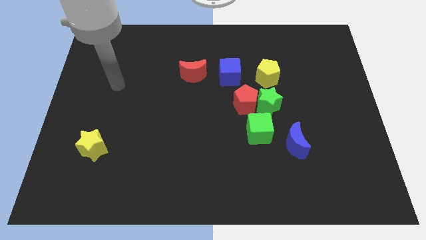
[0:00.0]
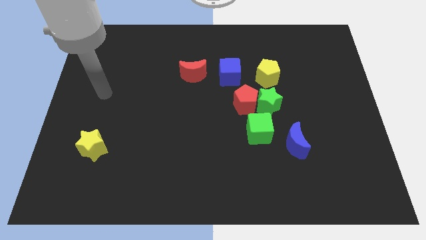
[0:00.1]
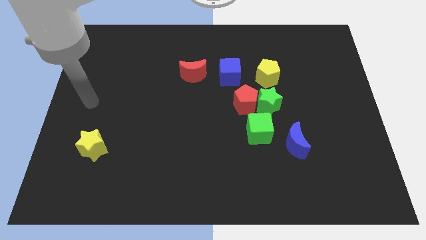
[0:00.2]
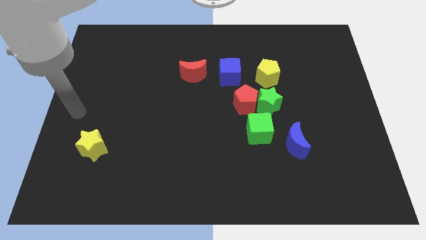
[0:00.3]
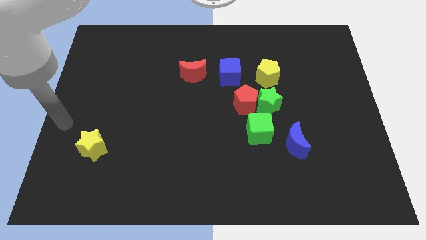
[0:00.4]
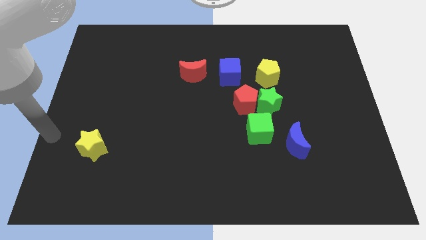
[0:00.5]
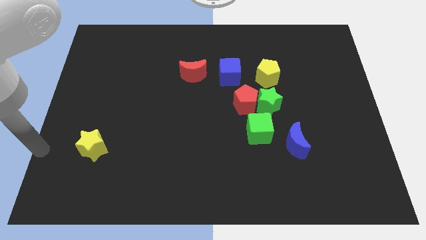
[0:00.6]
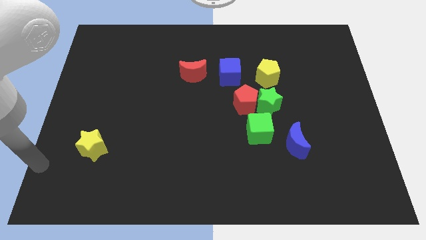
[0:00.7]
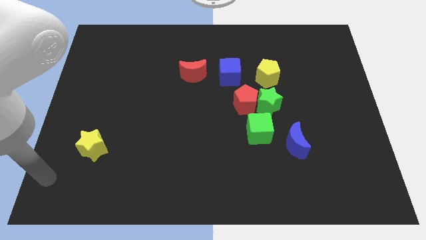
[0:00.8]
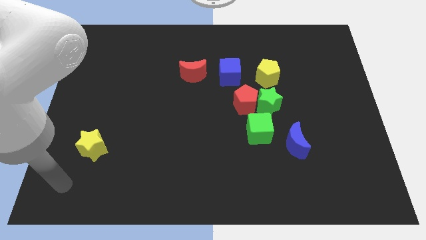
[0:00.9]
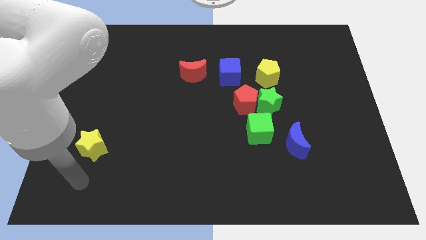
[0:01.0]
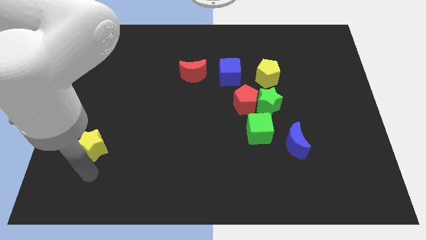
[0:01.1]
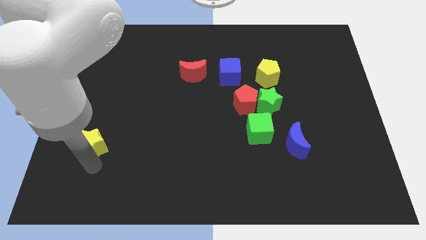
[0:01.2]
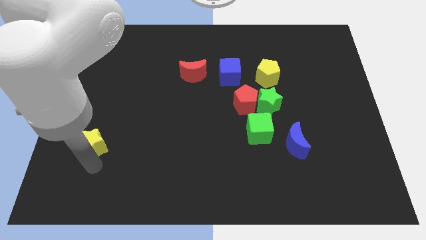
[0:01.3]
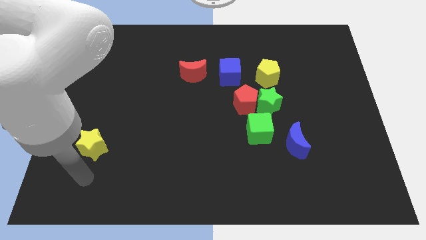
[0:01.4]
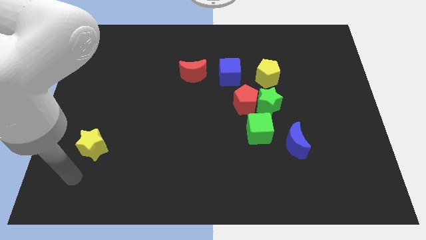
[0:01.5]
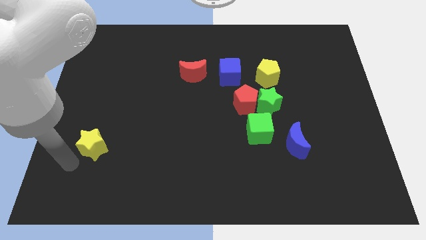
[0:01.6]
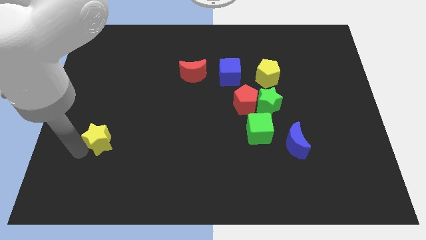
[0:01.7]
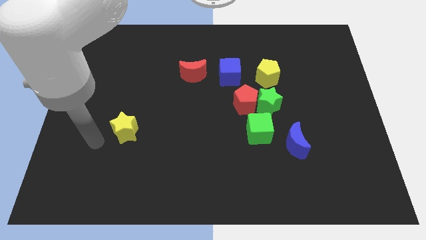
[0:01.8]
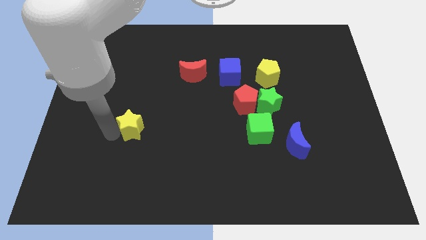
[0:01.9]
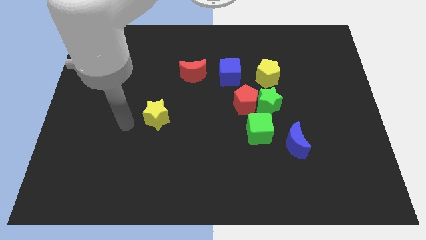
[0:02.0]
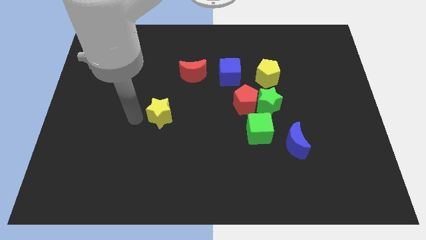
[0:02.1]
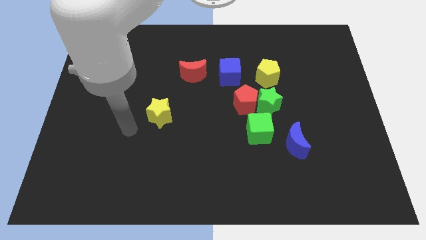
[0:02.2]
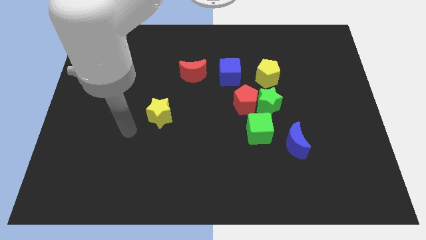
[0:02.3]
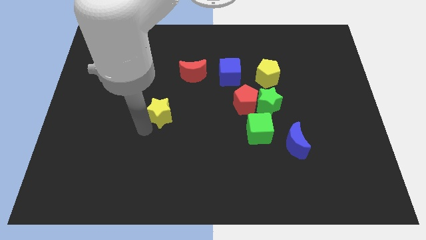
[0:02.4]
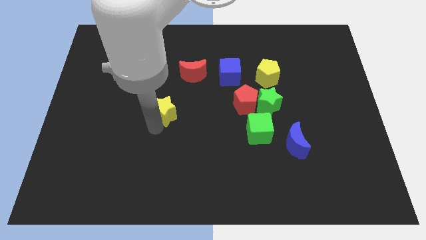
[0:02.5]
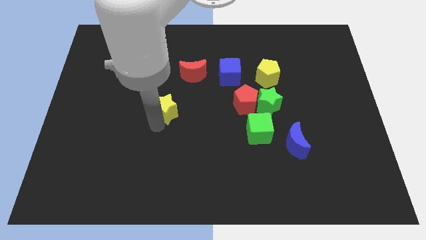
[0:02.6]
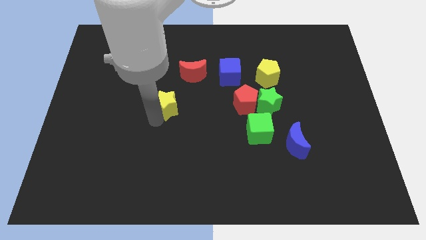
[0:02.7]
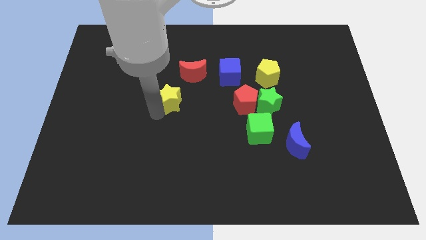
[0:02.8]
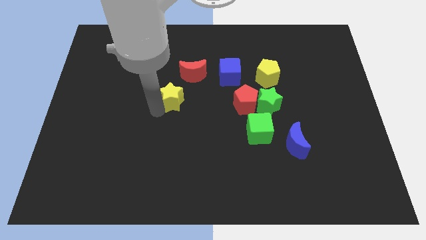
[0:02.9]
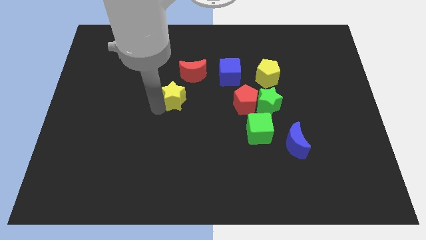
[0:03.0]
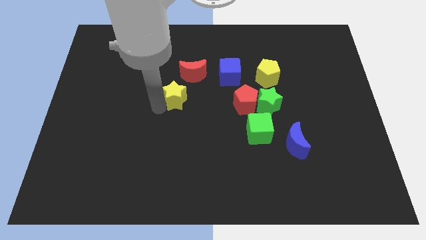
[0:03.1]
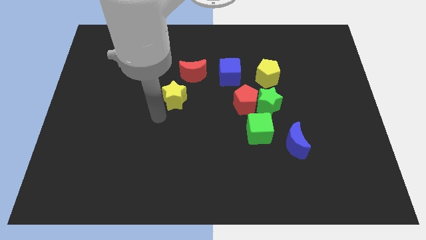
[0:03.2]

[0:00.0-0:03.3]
push the yellow star towards the bottom side of the red moon

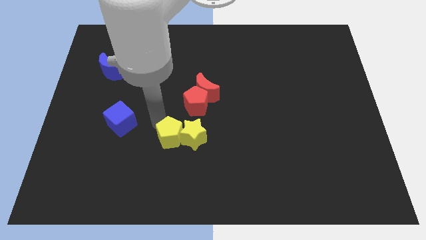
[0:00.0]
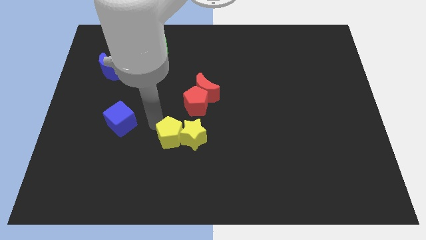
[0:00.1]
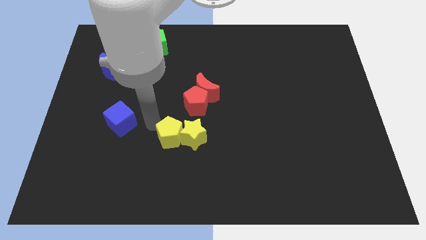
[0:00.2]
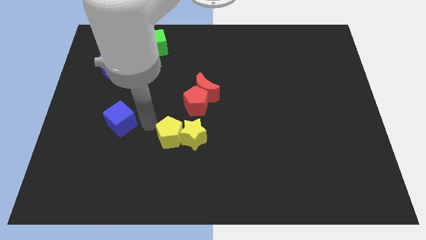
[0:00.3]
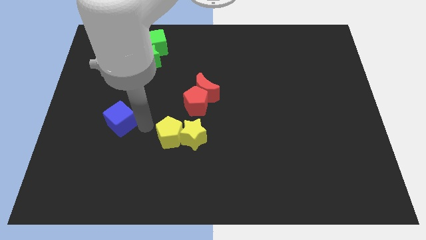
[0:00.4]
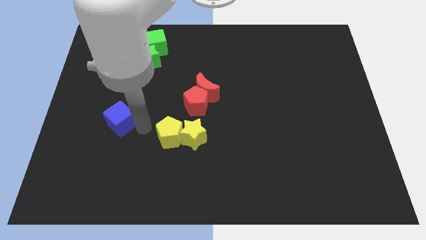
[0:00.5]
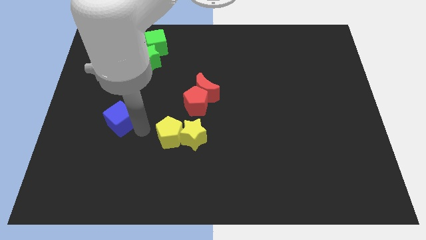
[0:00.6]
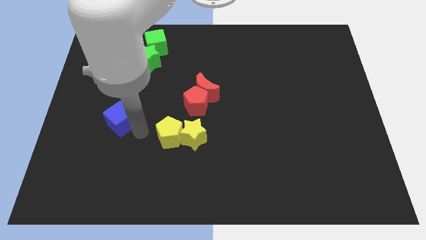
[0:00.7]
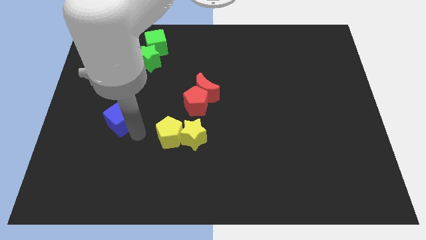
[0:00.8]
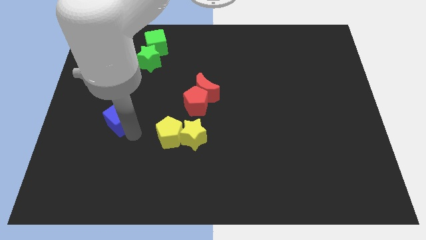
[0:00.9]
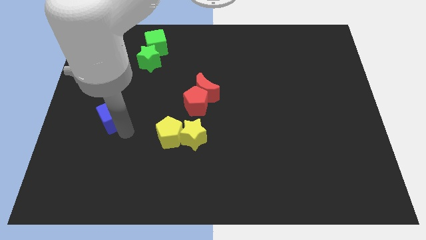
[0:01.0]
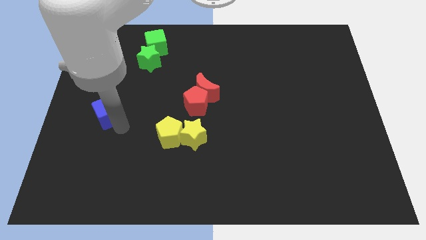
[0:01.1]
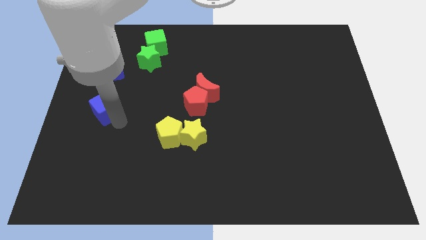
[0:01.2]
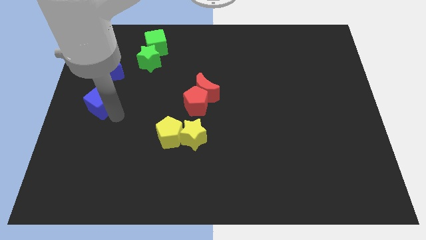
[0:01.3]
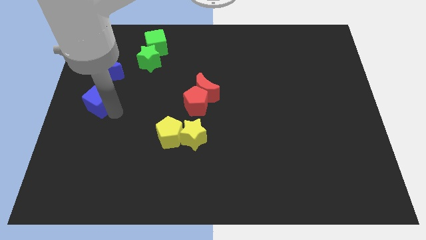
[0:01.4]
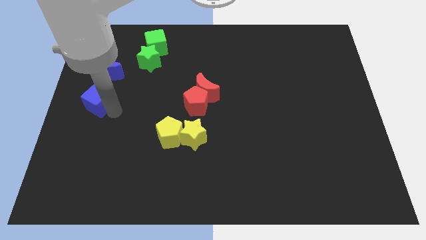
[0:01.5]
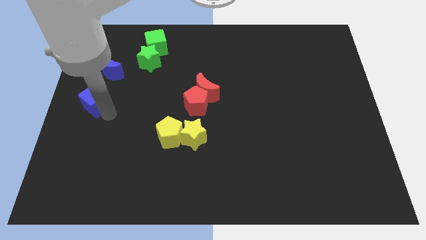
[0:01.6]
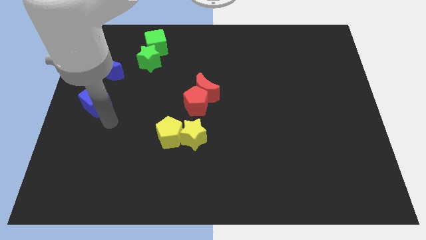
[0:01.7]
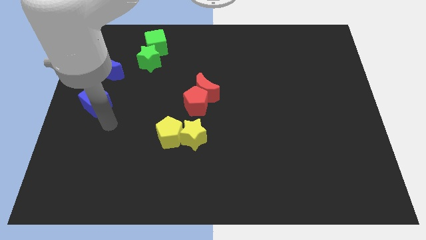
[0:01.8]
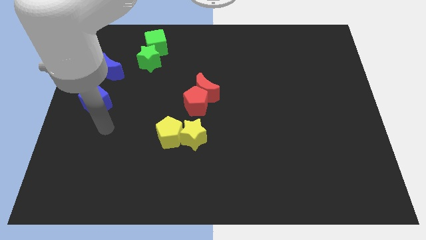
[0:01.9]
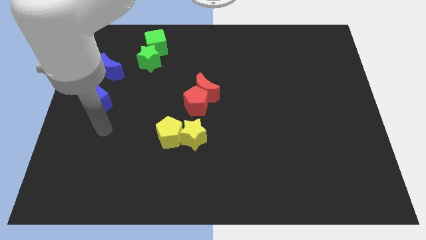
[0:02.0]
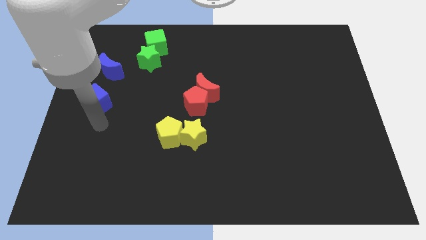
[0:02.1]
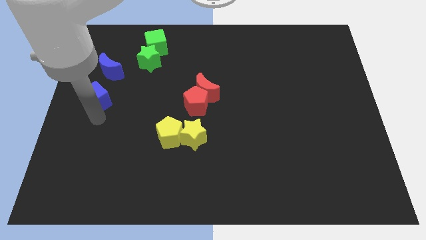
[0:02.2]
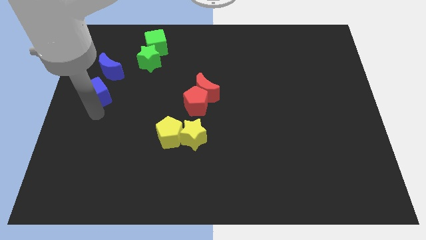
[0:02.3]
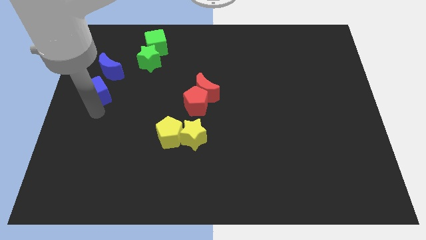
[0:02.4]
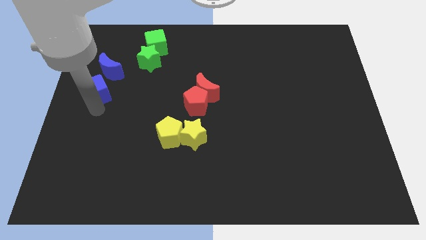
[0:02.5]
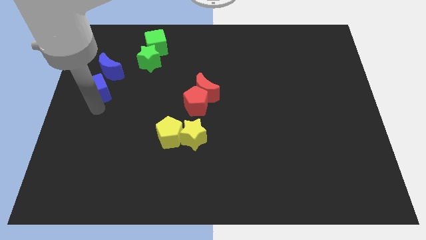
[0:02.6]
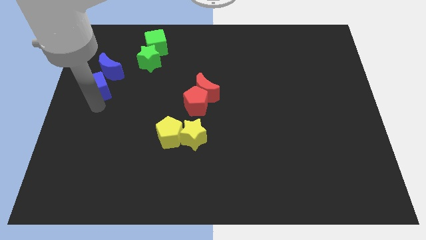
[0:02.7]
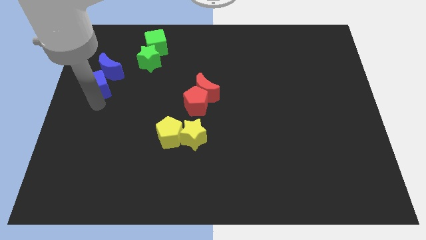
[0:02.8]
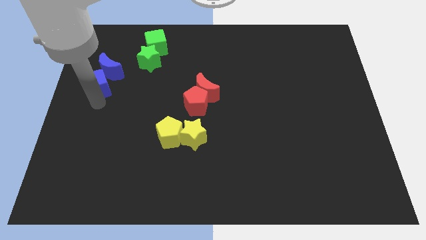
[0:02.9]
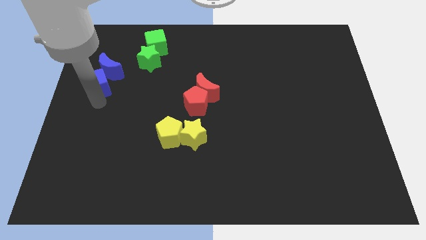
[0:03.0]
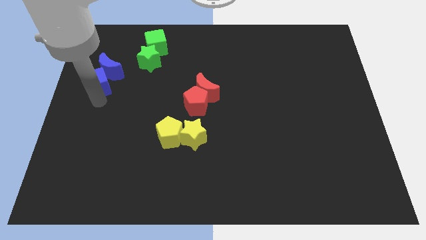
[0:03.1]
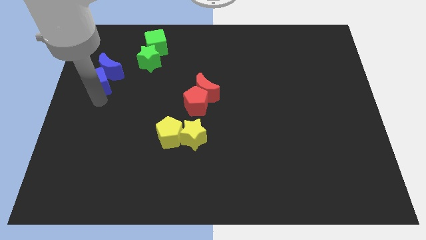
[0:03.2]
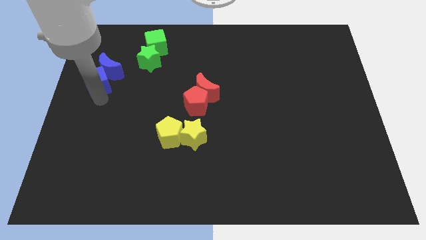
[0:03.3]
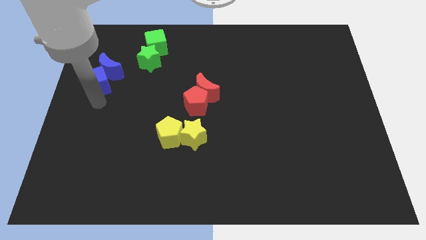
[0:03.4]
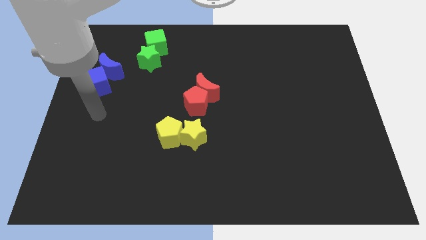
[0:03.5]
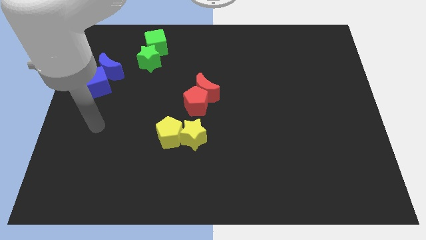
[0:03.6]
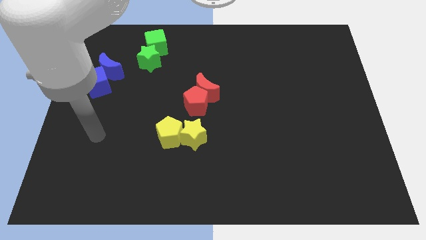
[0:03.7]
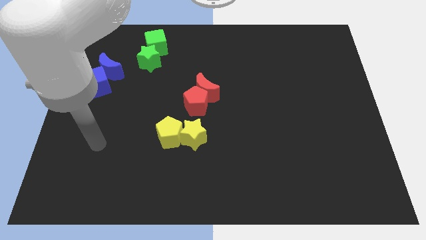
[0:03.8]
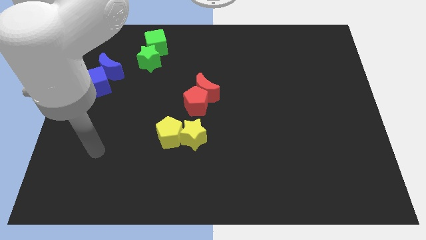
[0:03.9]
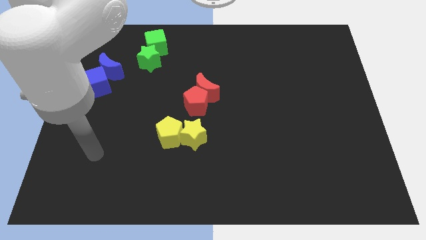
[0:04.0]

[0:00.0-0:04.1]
place the blue cube at the bottom left side of the blue moon

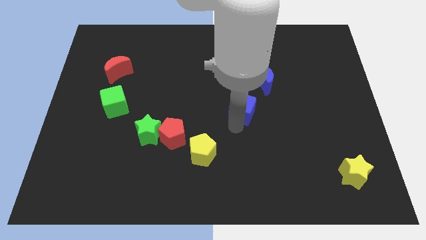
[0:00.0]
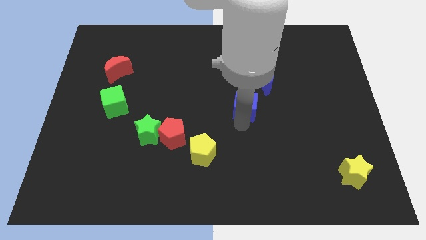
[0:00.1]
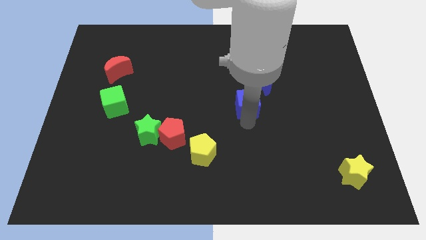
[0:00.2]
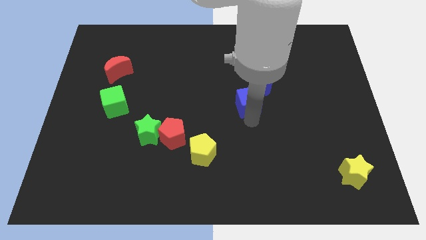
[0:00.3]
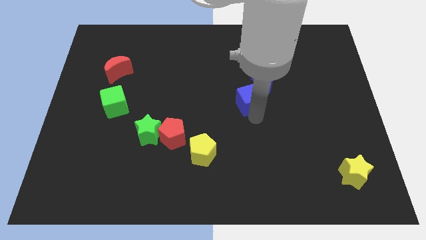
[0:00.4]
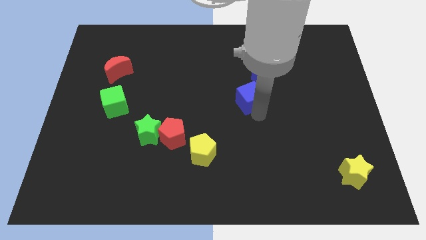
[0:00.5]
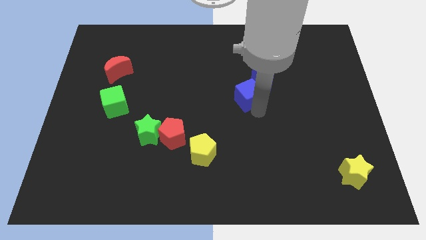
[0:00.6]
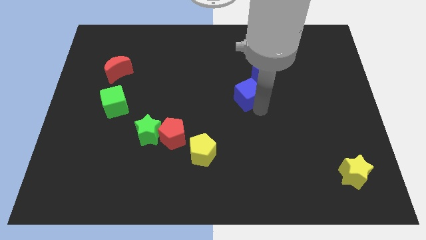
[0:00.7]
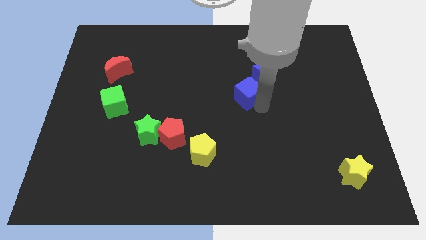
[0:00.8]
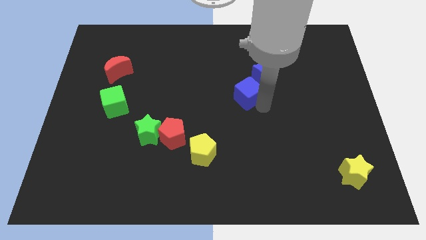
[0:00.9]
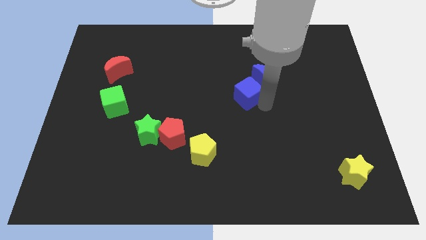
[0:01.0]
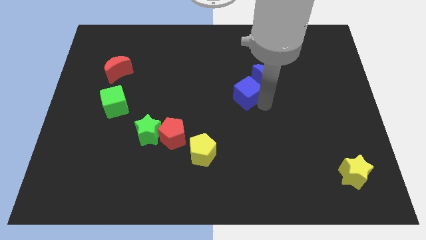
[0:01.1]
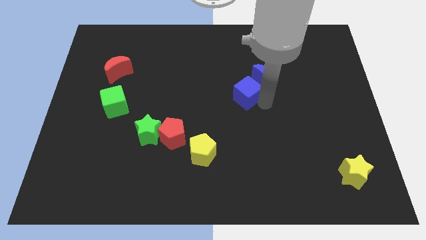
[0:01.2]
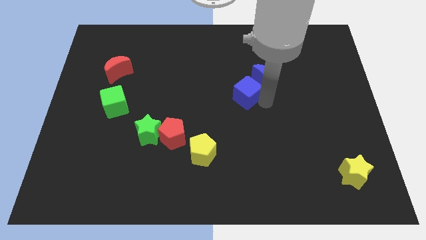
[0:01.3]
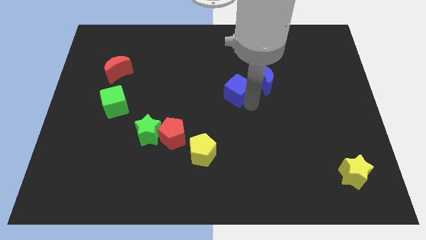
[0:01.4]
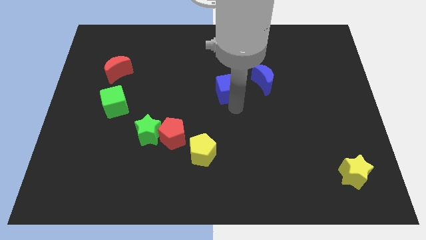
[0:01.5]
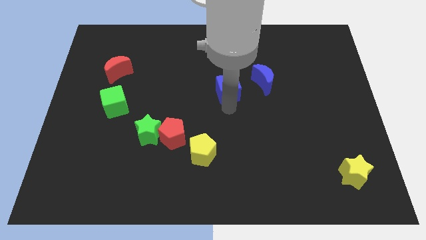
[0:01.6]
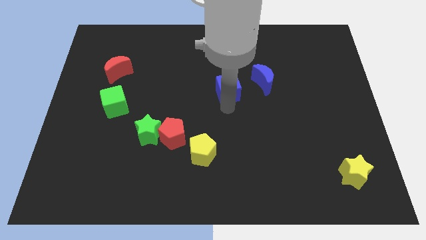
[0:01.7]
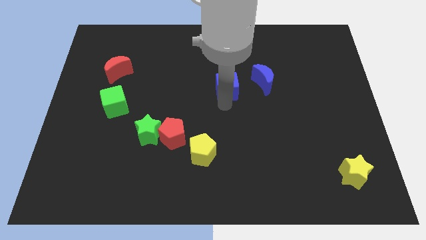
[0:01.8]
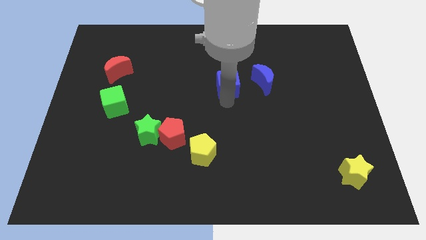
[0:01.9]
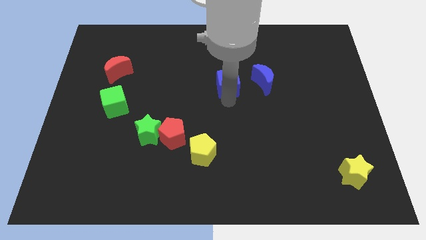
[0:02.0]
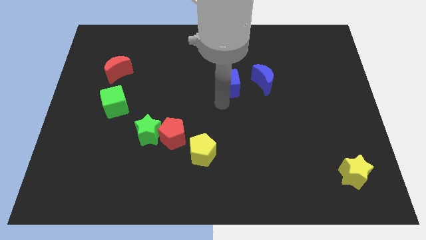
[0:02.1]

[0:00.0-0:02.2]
place the blue cube in between the blue moon and red moon
